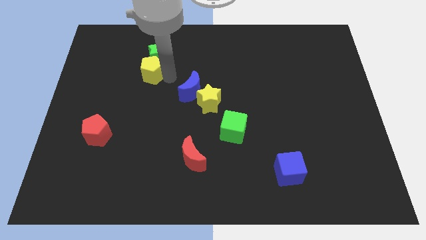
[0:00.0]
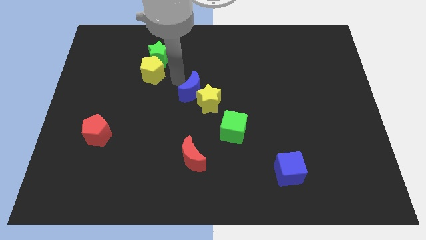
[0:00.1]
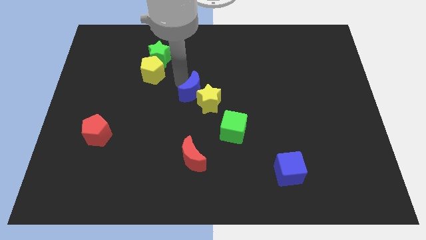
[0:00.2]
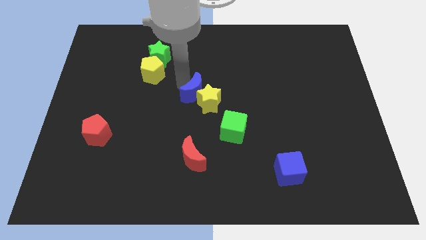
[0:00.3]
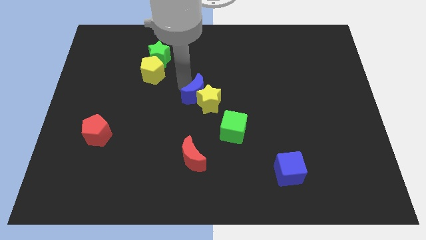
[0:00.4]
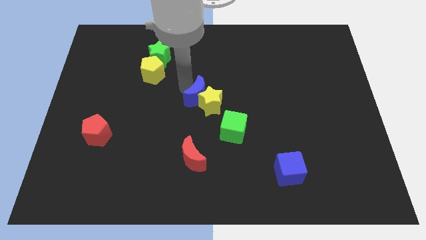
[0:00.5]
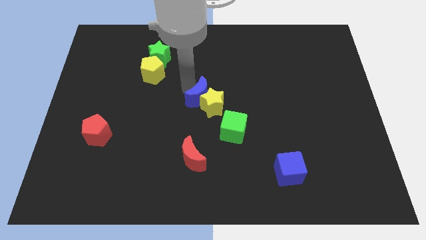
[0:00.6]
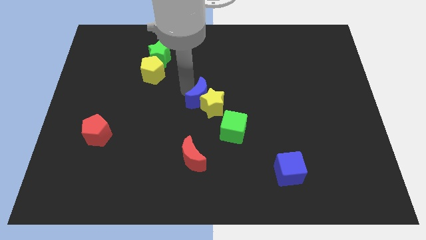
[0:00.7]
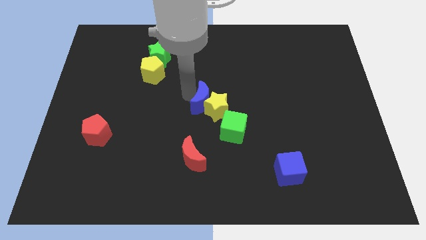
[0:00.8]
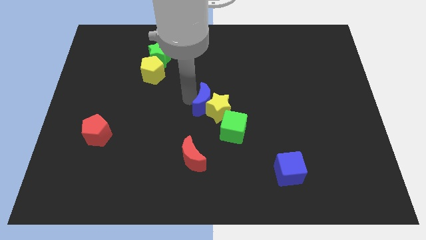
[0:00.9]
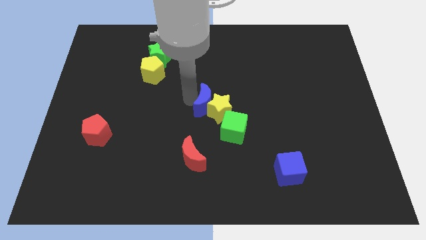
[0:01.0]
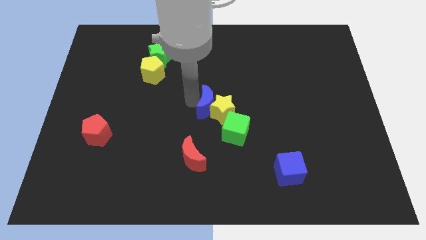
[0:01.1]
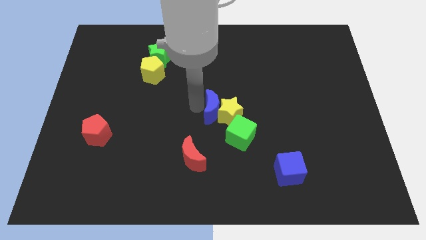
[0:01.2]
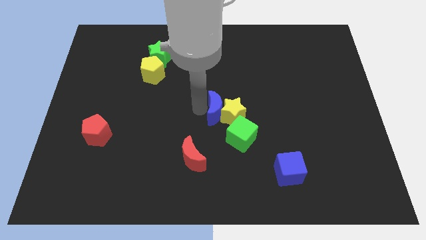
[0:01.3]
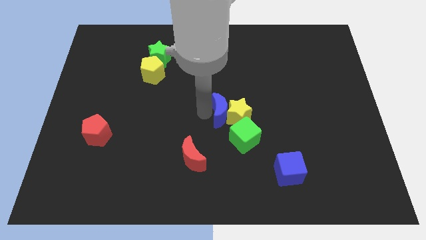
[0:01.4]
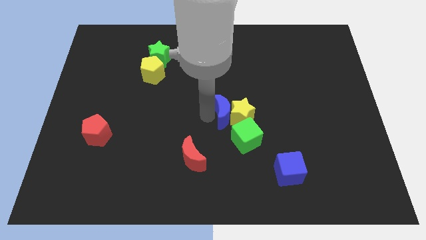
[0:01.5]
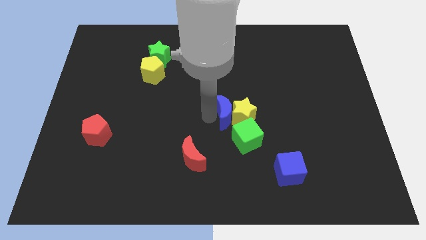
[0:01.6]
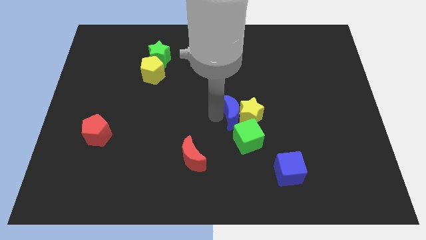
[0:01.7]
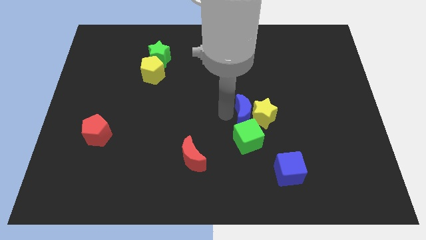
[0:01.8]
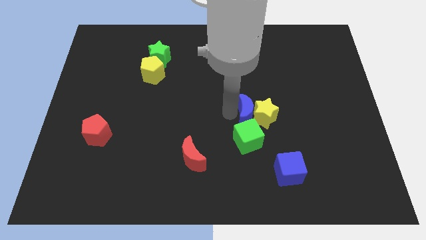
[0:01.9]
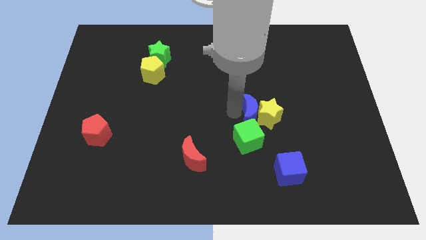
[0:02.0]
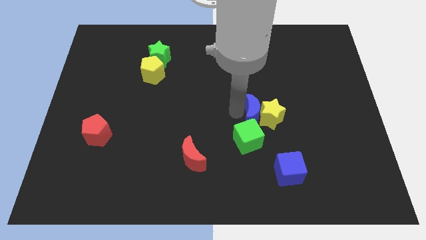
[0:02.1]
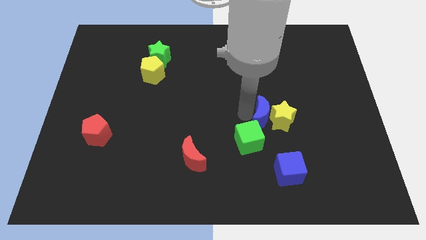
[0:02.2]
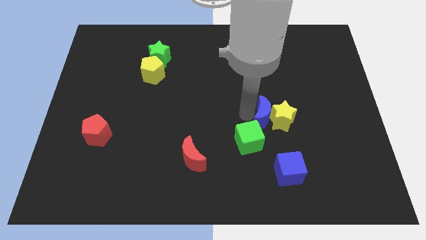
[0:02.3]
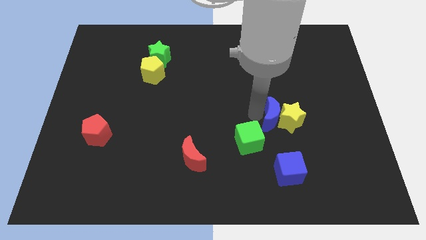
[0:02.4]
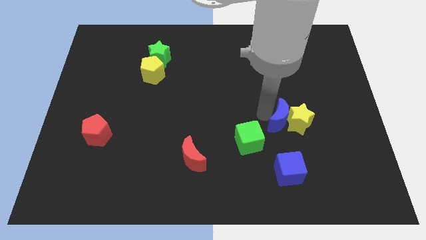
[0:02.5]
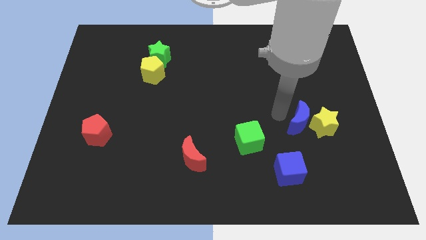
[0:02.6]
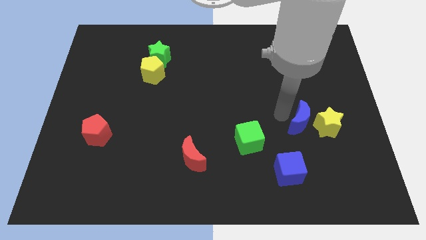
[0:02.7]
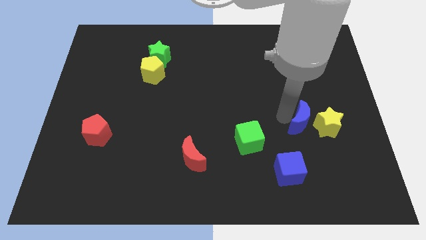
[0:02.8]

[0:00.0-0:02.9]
push the blue moon into the yelow star

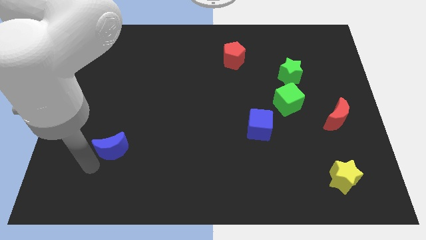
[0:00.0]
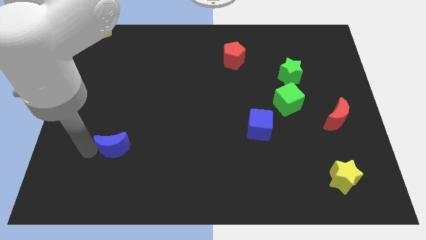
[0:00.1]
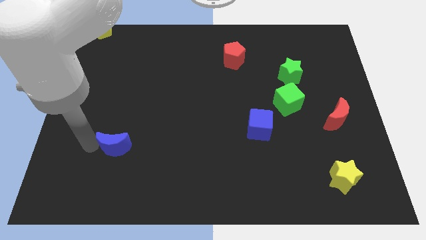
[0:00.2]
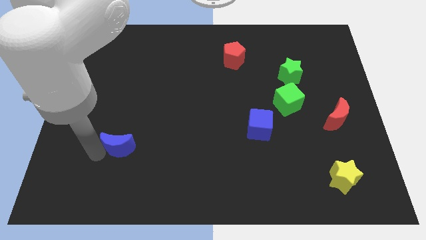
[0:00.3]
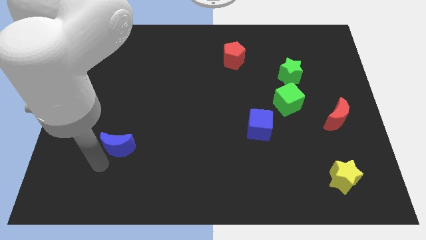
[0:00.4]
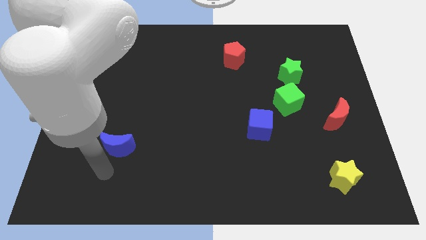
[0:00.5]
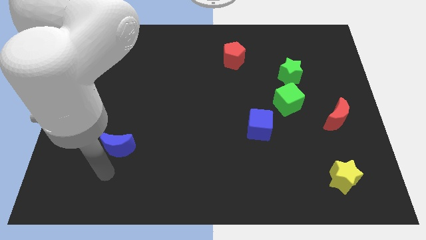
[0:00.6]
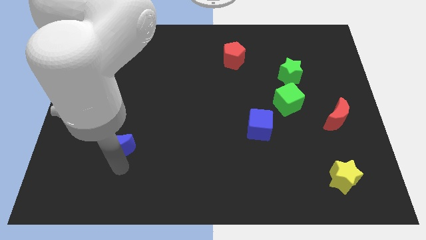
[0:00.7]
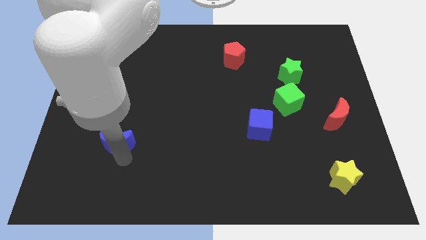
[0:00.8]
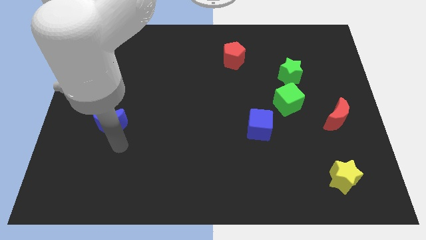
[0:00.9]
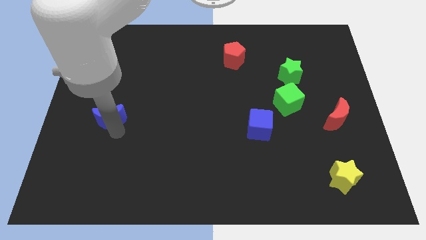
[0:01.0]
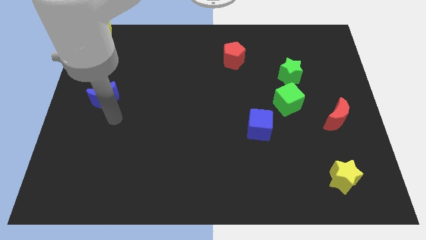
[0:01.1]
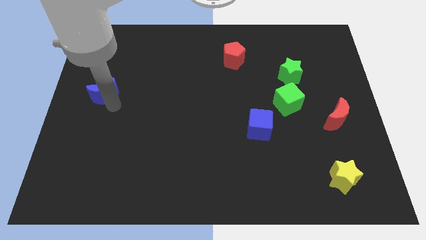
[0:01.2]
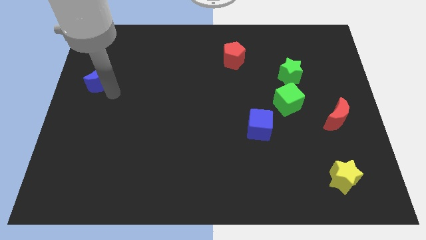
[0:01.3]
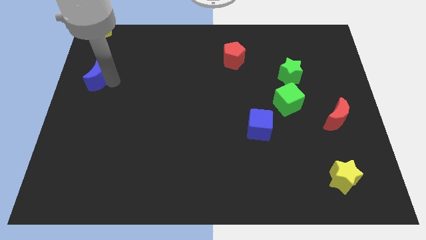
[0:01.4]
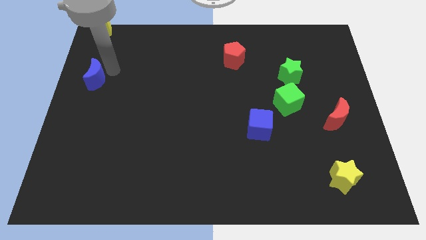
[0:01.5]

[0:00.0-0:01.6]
place the blue crescent vertically under the yellow star

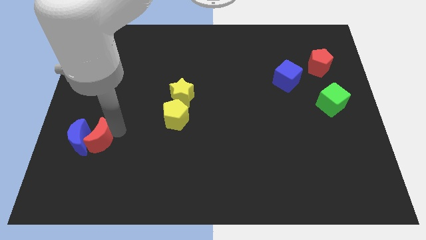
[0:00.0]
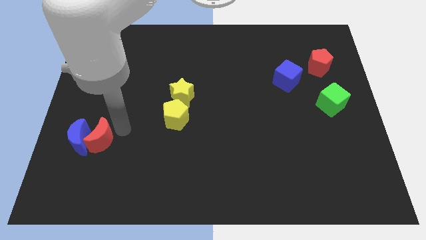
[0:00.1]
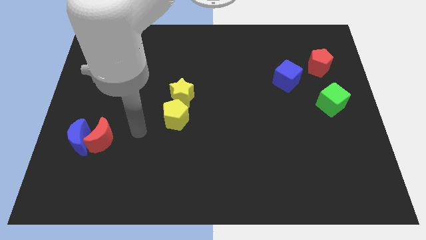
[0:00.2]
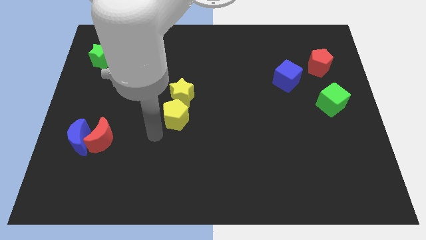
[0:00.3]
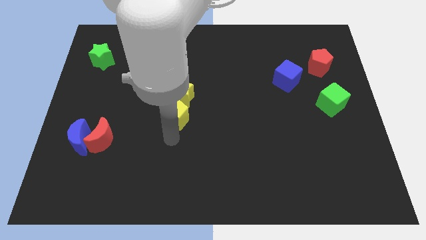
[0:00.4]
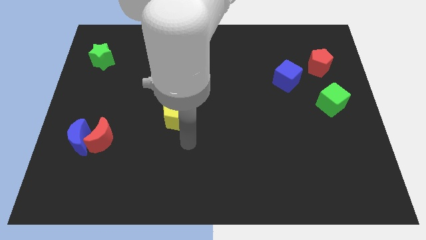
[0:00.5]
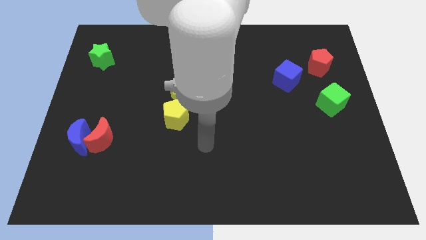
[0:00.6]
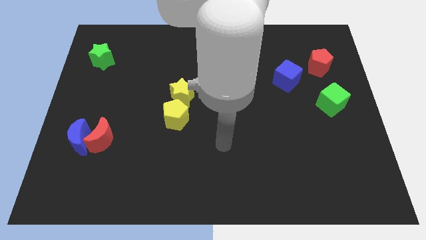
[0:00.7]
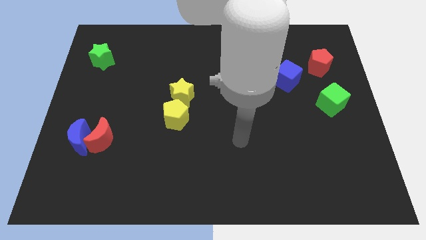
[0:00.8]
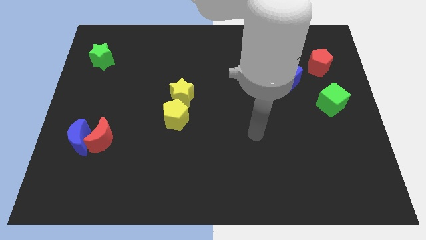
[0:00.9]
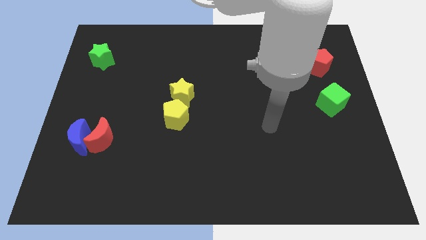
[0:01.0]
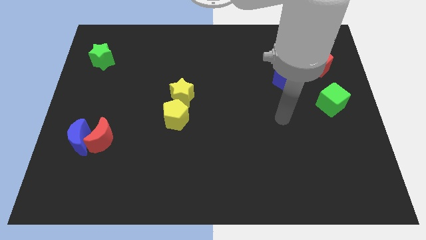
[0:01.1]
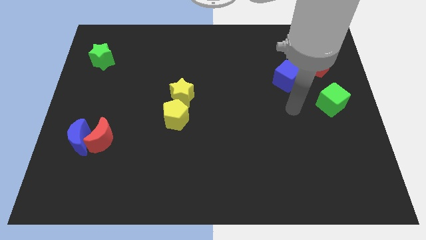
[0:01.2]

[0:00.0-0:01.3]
move your arm towards the right side of the board

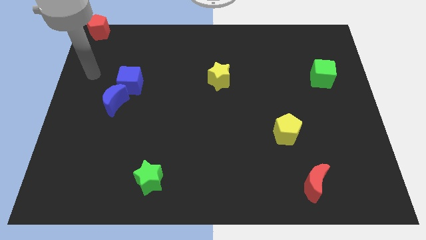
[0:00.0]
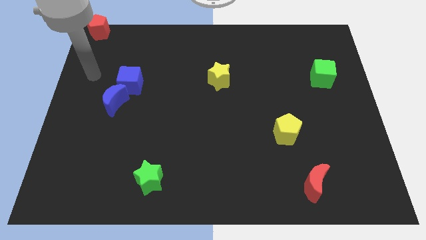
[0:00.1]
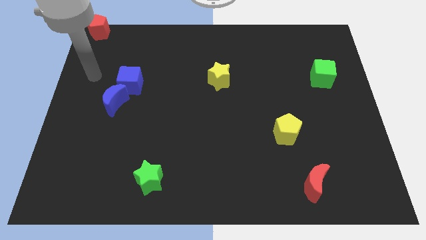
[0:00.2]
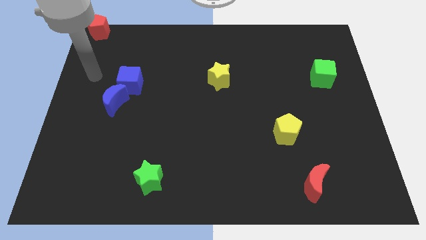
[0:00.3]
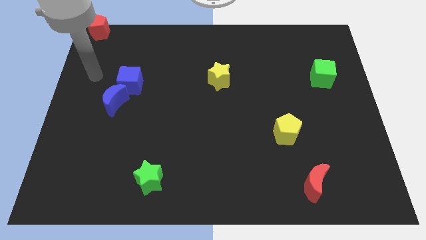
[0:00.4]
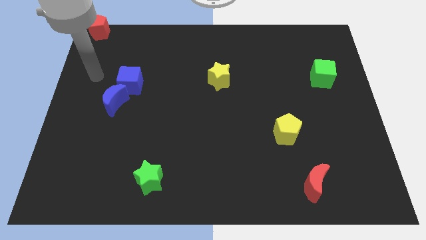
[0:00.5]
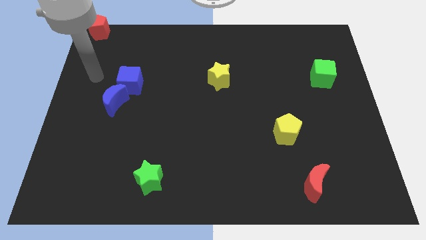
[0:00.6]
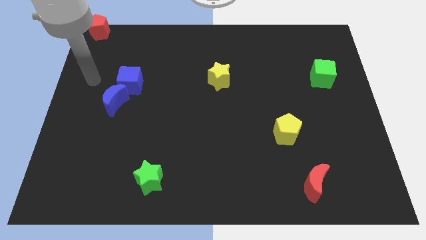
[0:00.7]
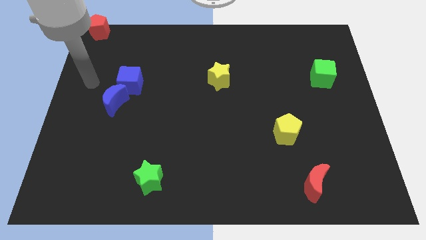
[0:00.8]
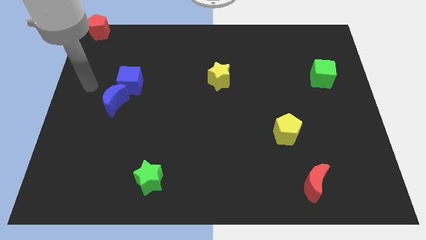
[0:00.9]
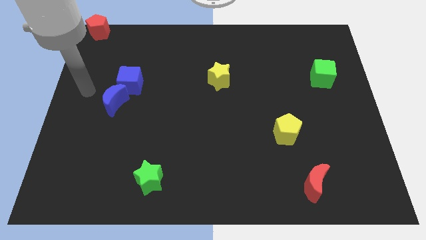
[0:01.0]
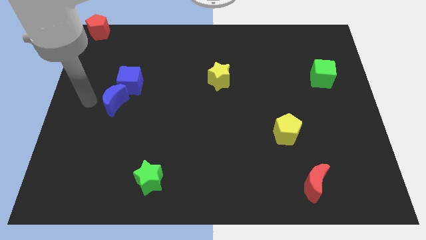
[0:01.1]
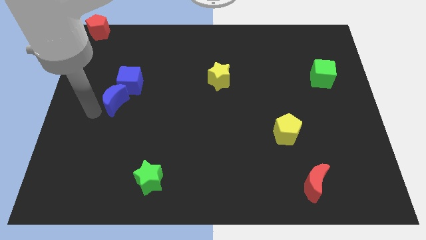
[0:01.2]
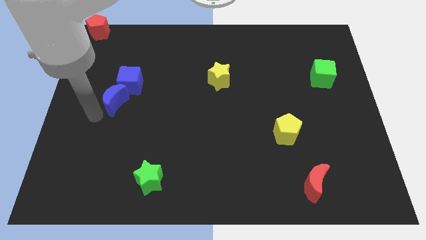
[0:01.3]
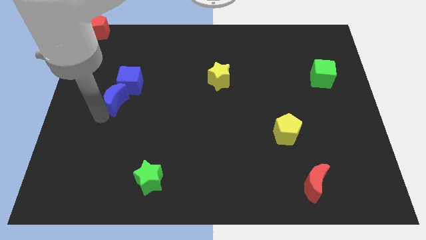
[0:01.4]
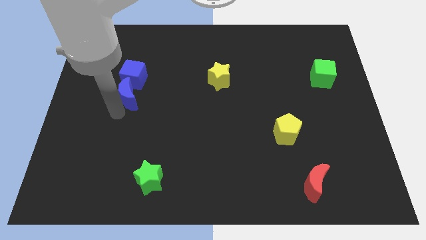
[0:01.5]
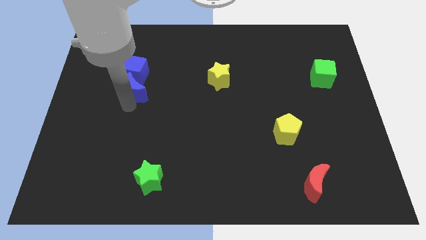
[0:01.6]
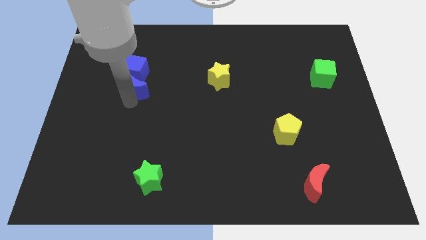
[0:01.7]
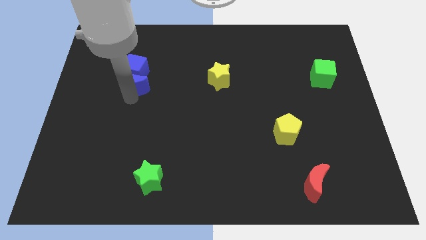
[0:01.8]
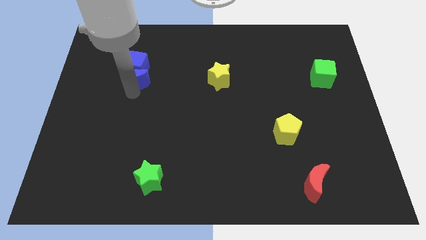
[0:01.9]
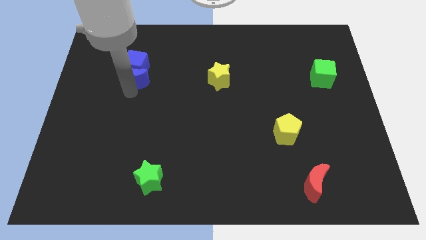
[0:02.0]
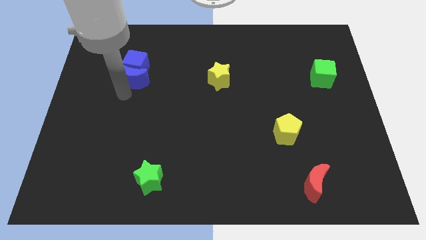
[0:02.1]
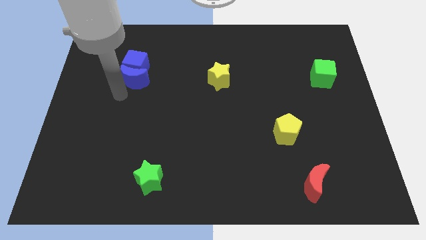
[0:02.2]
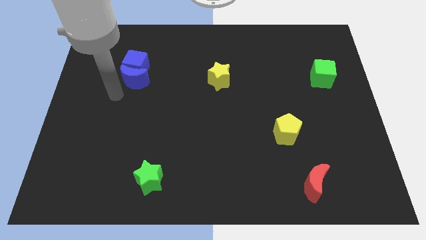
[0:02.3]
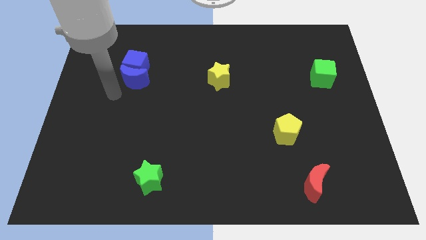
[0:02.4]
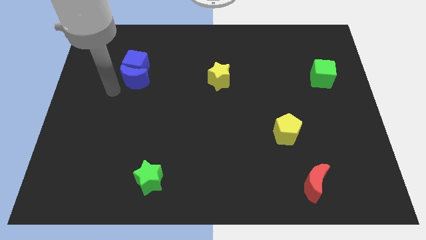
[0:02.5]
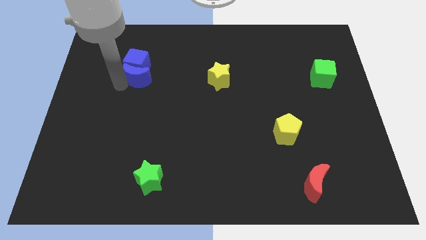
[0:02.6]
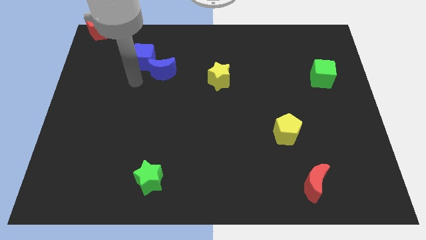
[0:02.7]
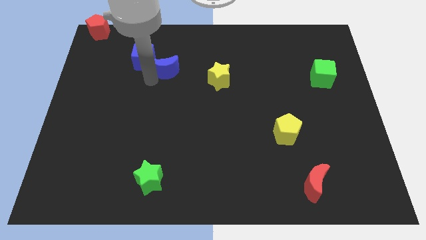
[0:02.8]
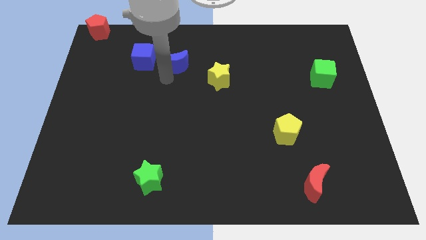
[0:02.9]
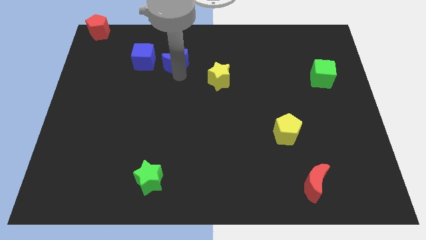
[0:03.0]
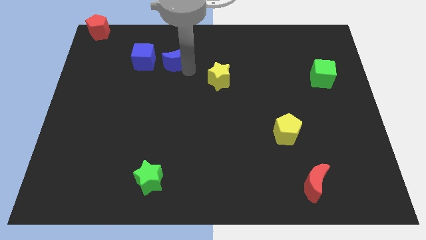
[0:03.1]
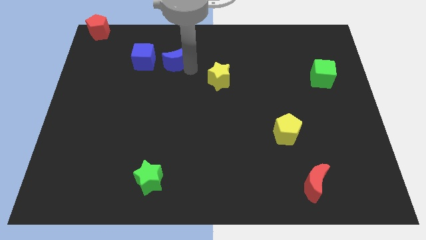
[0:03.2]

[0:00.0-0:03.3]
move the blue crescent to the right side of the blue cube
